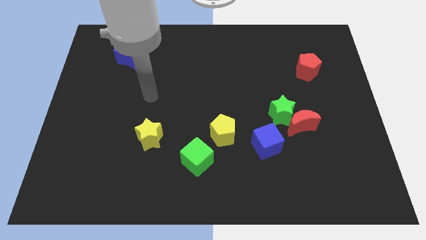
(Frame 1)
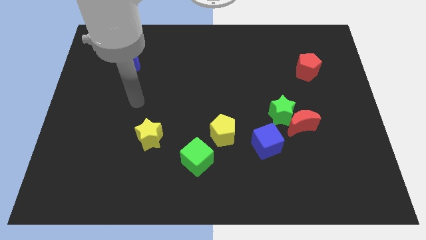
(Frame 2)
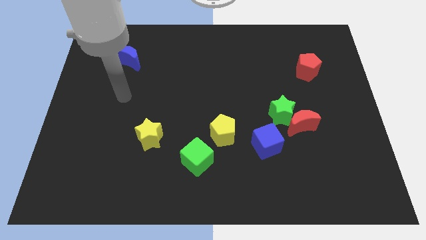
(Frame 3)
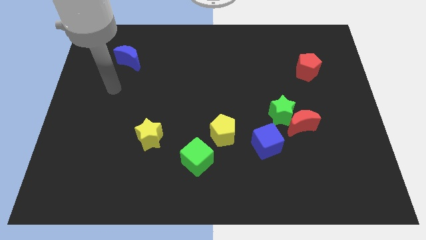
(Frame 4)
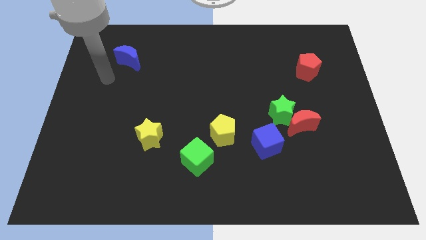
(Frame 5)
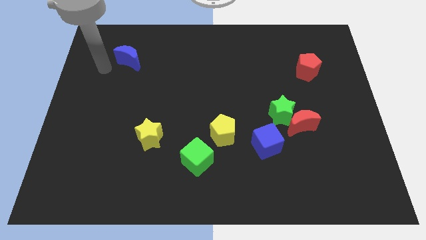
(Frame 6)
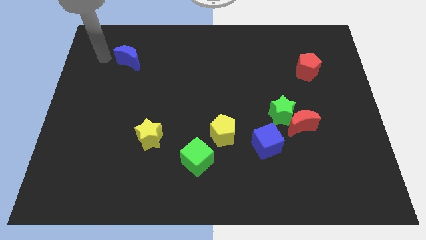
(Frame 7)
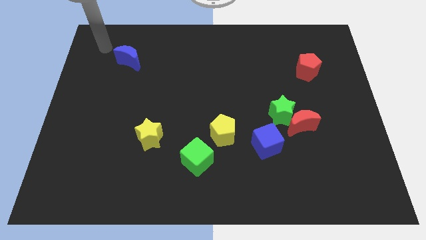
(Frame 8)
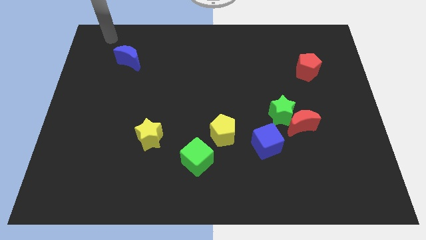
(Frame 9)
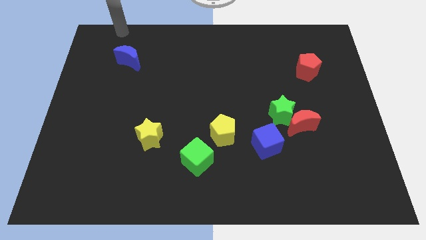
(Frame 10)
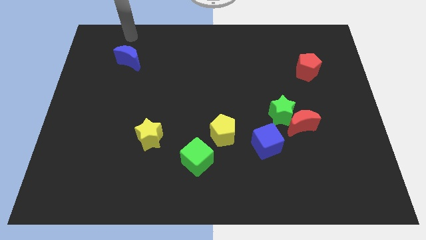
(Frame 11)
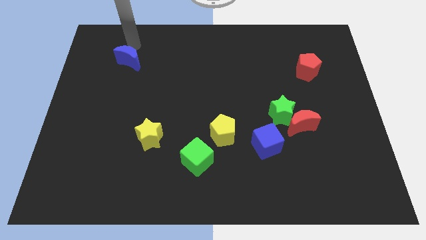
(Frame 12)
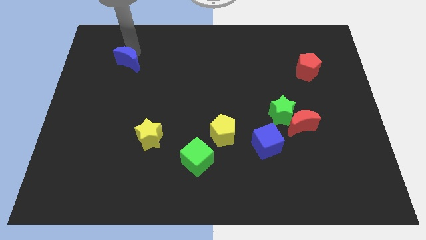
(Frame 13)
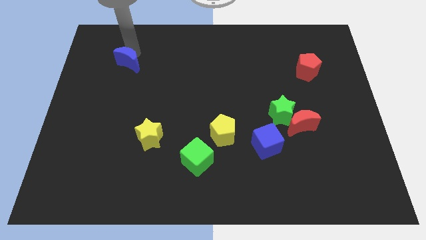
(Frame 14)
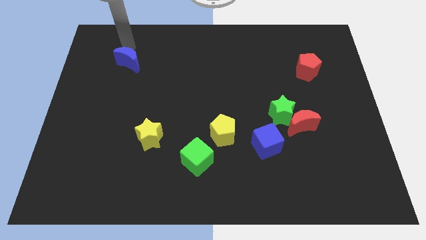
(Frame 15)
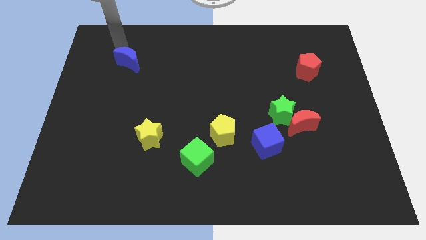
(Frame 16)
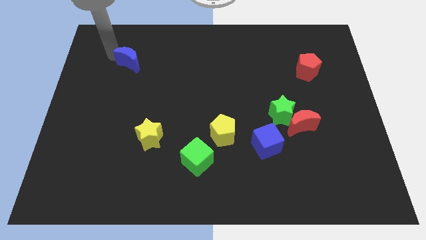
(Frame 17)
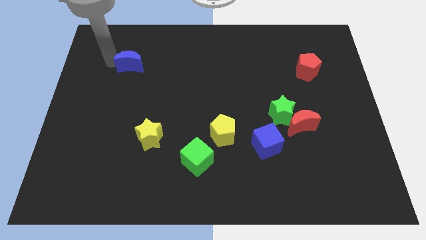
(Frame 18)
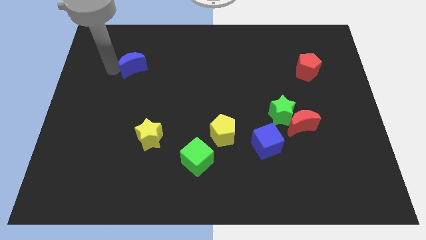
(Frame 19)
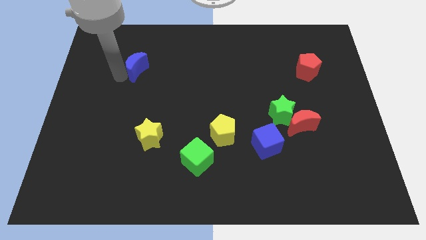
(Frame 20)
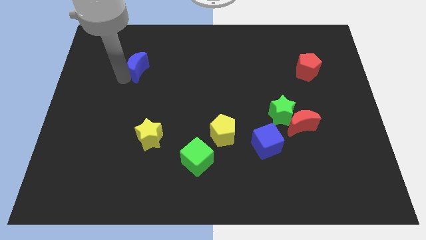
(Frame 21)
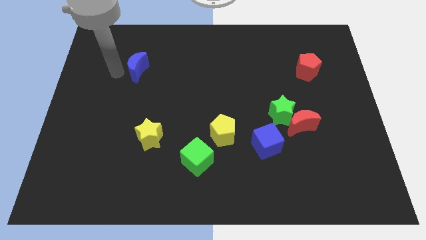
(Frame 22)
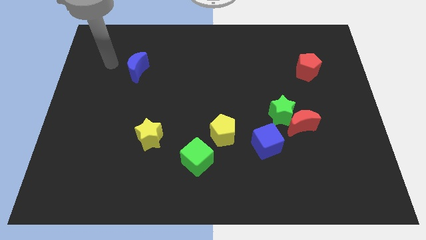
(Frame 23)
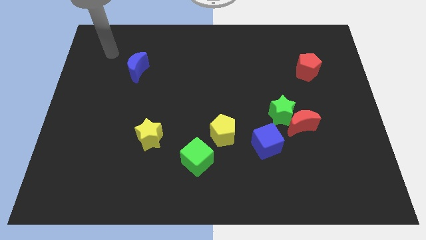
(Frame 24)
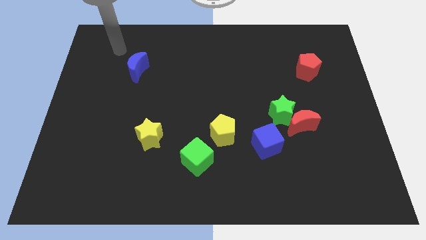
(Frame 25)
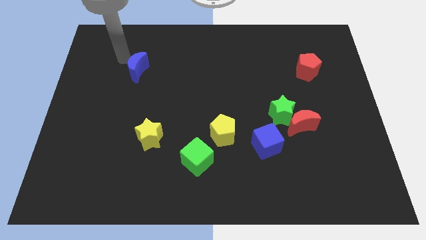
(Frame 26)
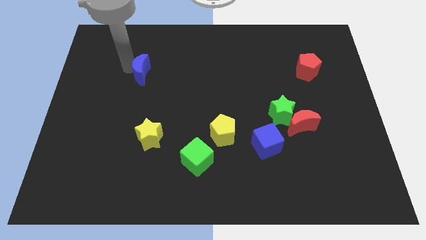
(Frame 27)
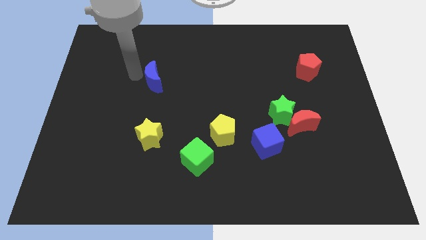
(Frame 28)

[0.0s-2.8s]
move the blue crescent vertically above the yellow star

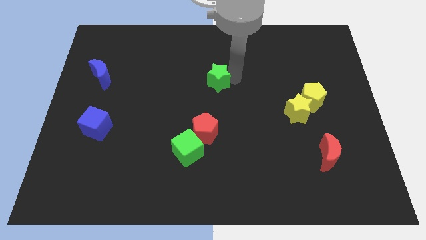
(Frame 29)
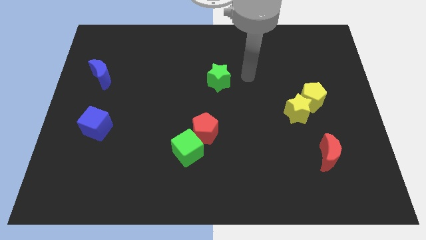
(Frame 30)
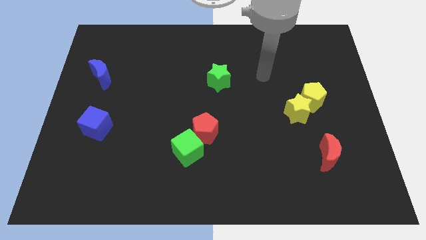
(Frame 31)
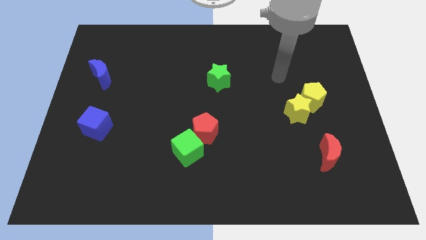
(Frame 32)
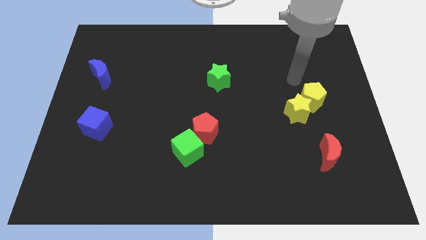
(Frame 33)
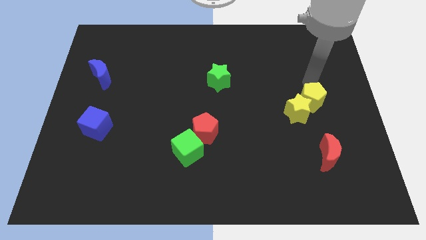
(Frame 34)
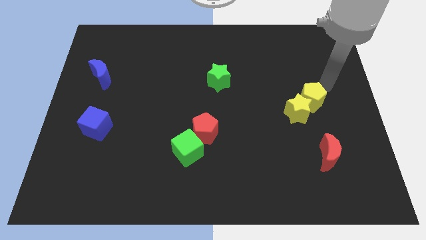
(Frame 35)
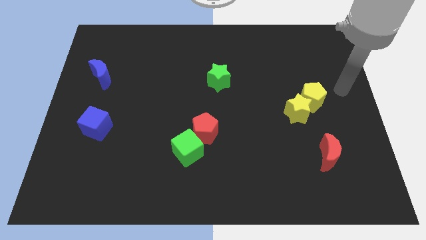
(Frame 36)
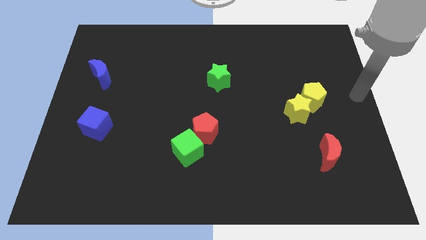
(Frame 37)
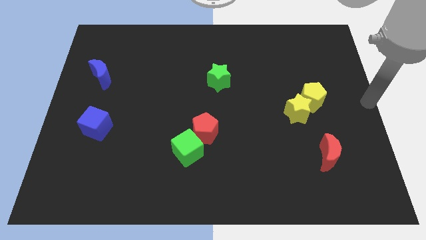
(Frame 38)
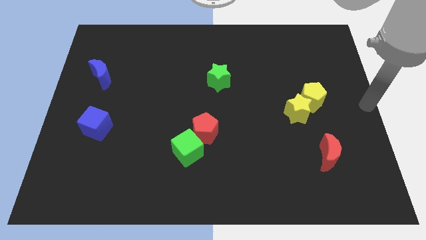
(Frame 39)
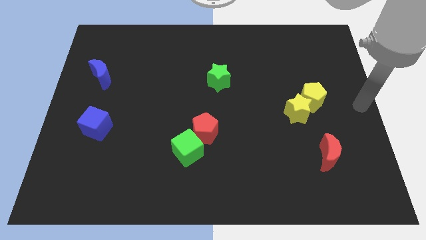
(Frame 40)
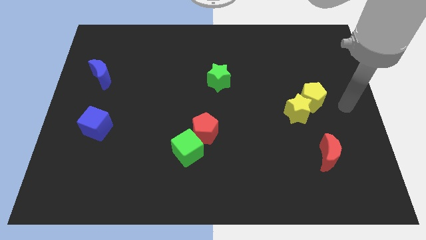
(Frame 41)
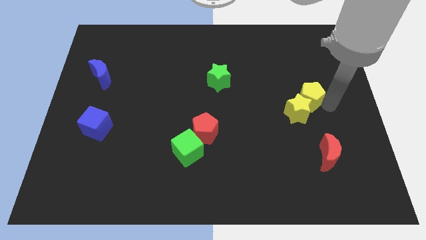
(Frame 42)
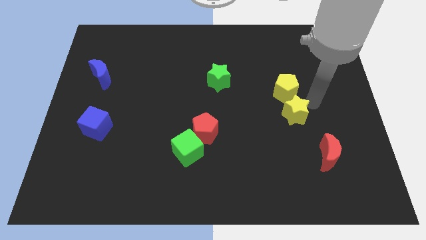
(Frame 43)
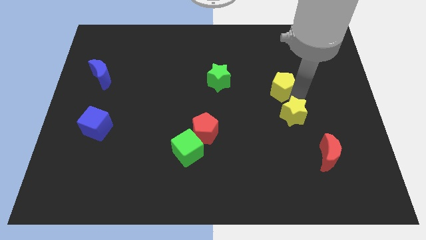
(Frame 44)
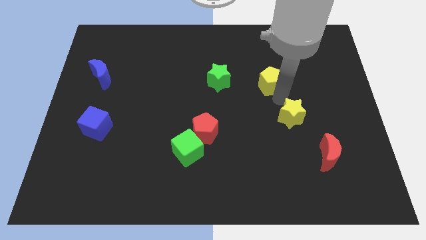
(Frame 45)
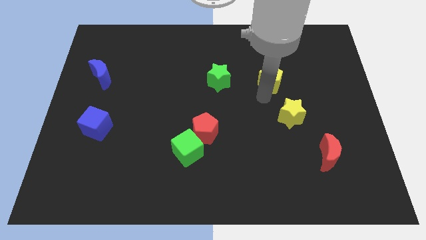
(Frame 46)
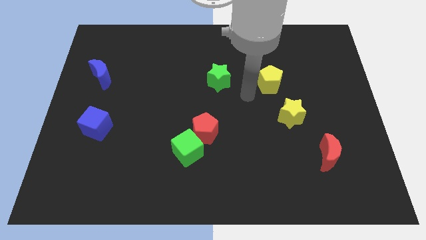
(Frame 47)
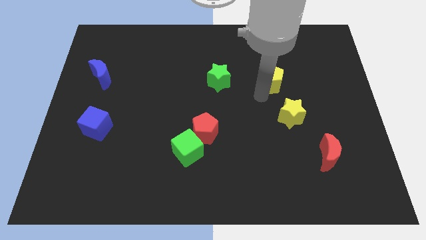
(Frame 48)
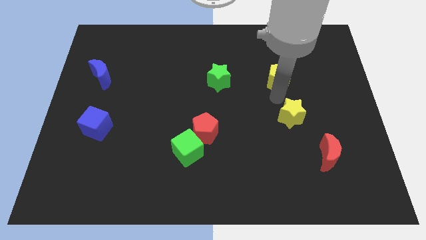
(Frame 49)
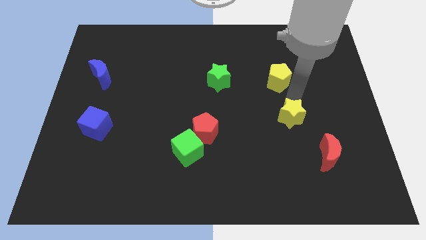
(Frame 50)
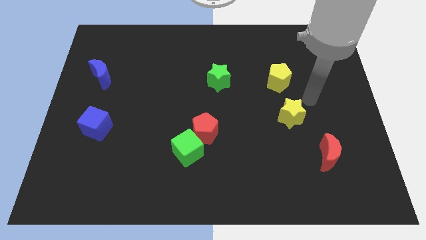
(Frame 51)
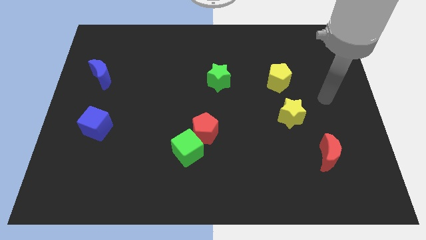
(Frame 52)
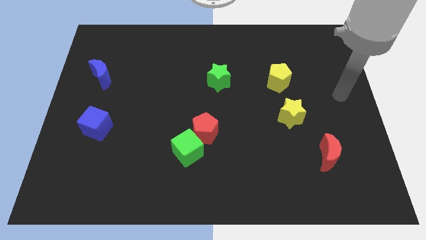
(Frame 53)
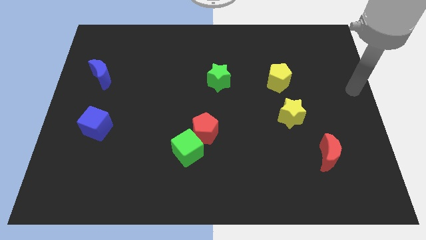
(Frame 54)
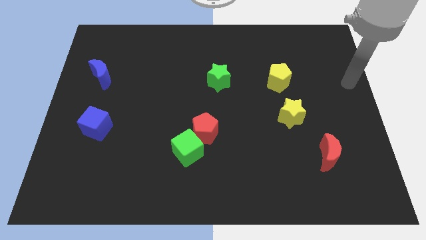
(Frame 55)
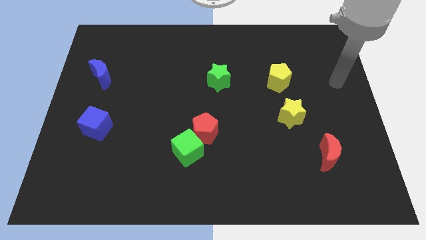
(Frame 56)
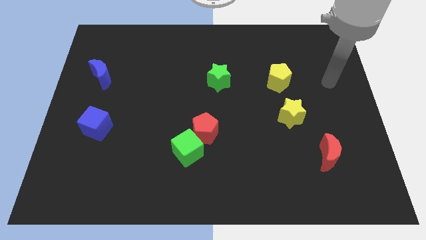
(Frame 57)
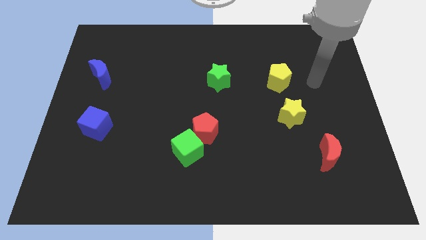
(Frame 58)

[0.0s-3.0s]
separate yellow pentagon from yellow star

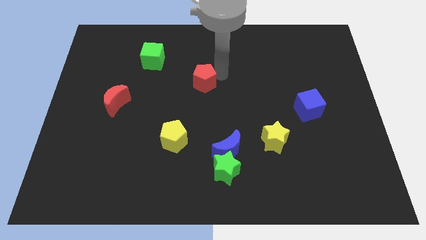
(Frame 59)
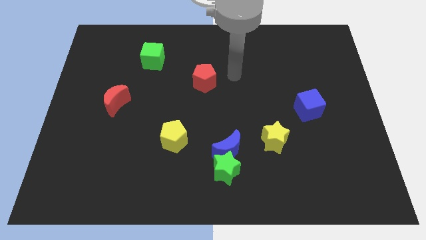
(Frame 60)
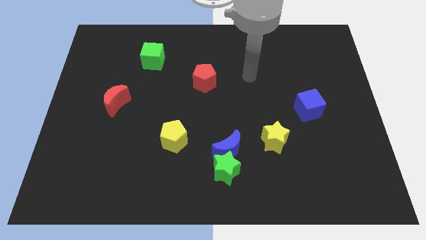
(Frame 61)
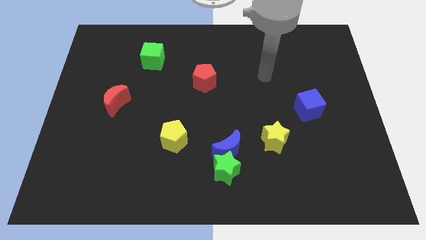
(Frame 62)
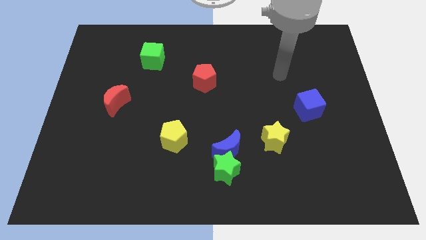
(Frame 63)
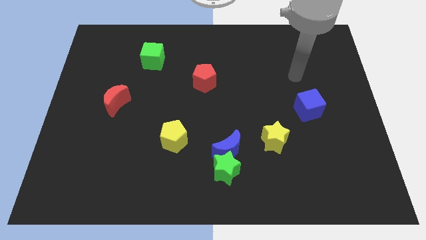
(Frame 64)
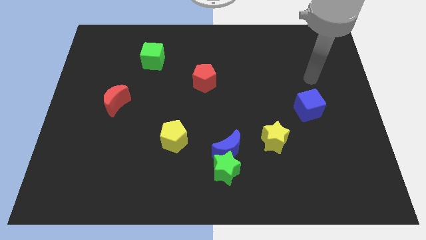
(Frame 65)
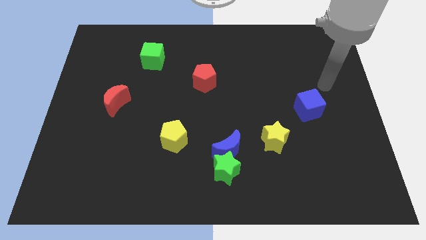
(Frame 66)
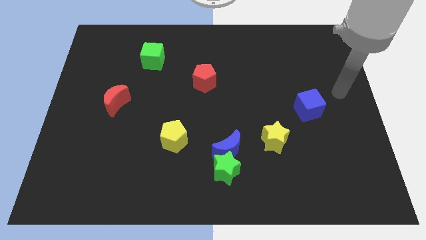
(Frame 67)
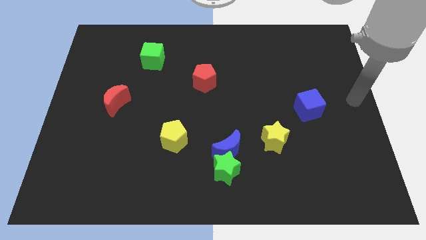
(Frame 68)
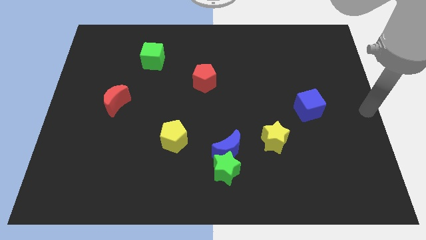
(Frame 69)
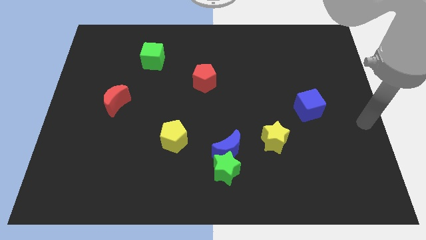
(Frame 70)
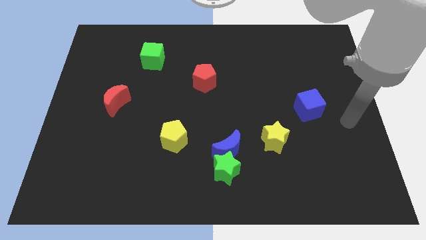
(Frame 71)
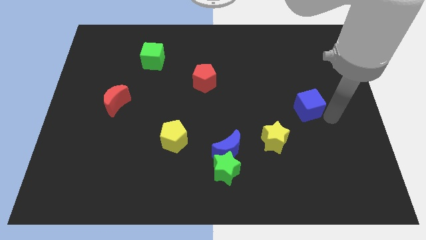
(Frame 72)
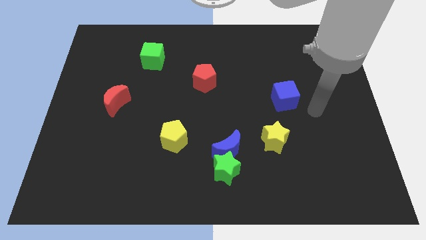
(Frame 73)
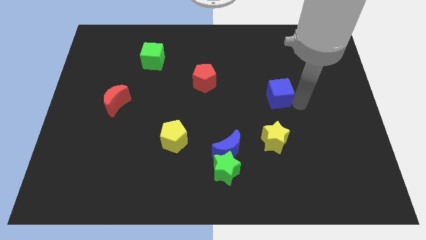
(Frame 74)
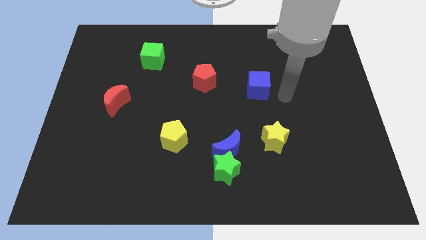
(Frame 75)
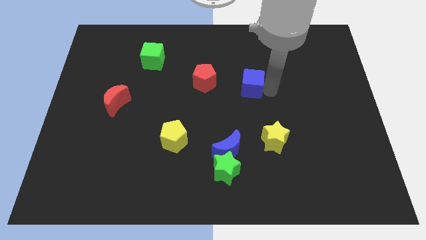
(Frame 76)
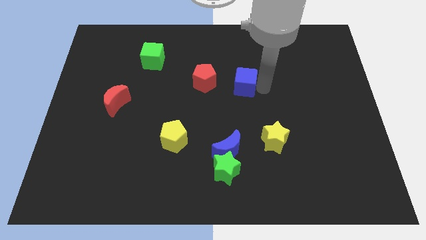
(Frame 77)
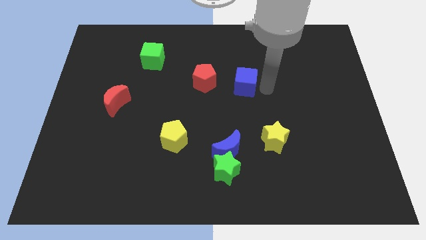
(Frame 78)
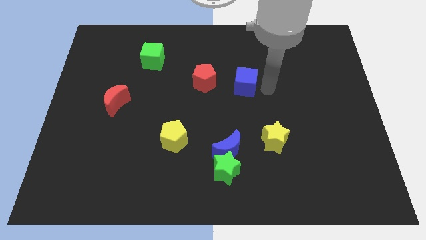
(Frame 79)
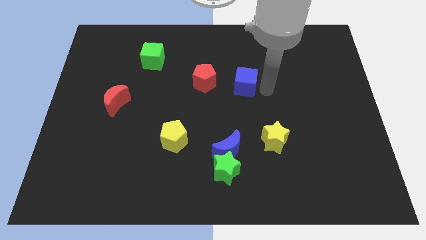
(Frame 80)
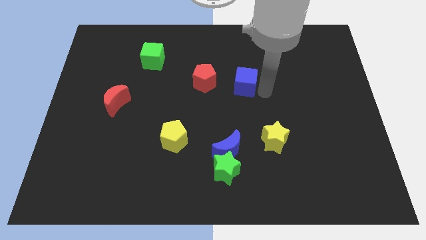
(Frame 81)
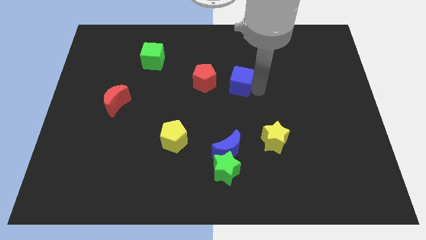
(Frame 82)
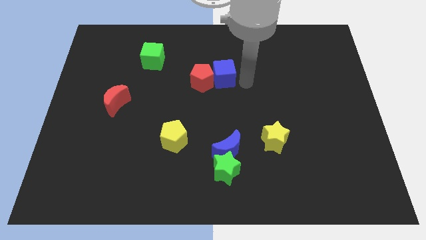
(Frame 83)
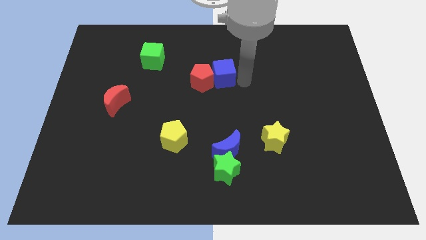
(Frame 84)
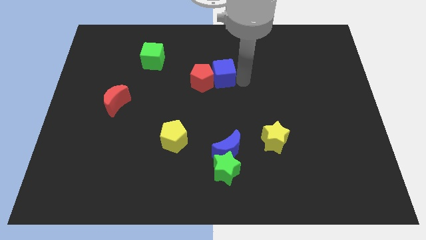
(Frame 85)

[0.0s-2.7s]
push the blue cube into the red pentagon

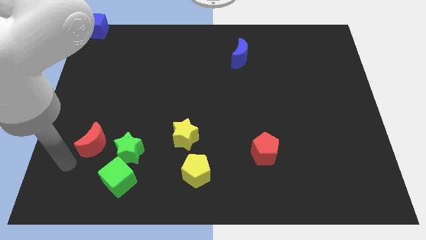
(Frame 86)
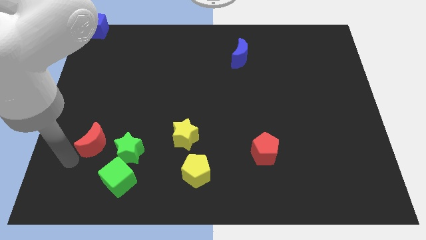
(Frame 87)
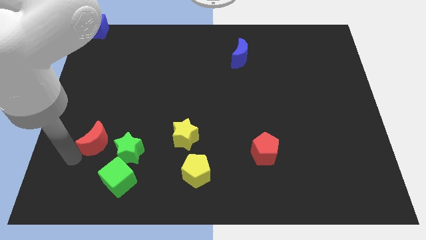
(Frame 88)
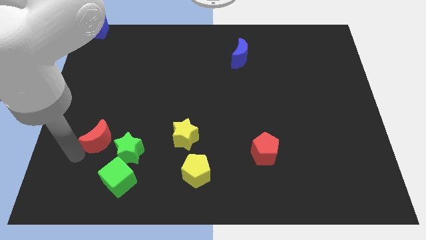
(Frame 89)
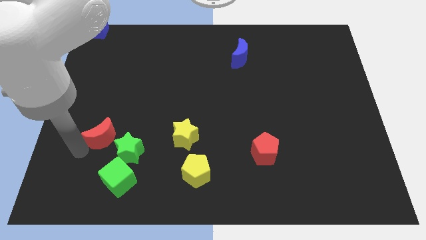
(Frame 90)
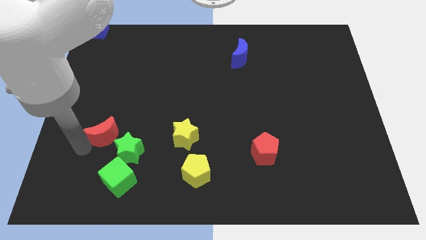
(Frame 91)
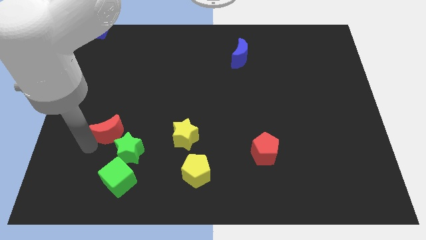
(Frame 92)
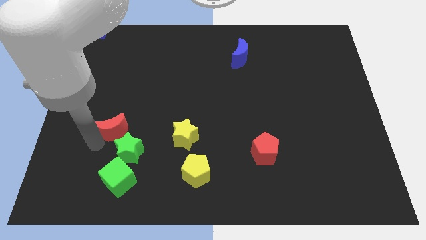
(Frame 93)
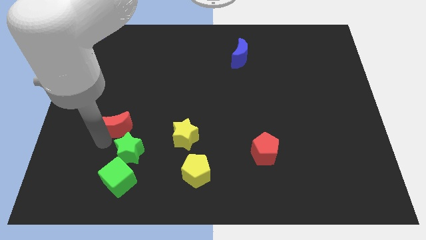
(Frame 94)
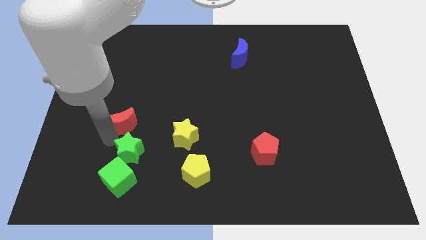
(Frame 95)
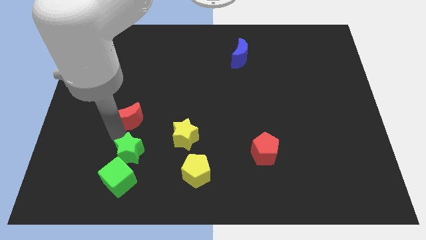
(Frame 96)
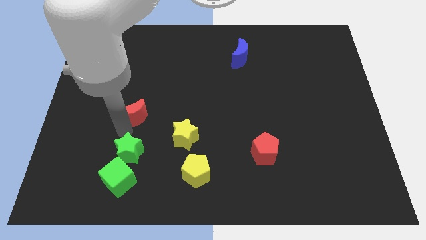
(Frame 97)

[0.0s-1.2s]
push the red crescent to the top of the green star
